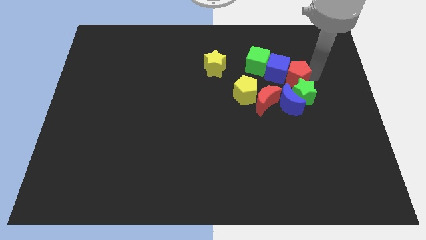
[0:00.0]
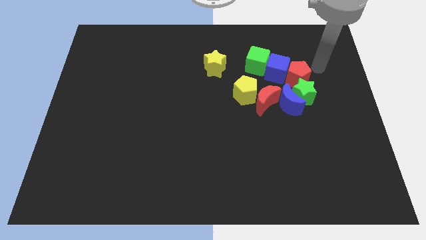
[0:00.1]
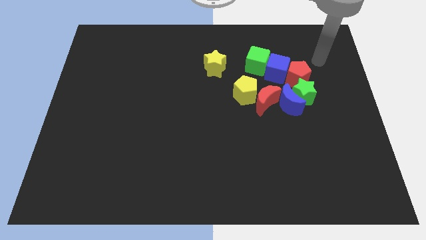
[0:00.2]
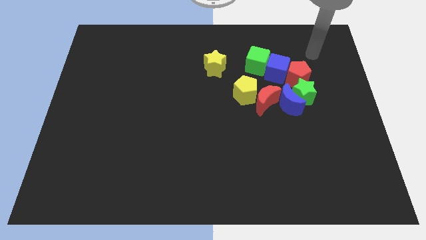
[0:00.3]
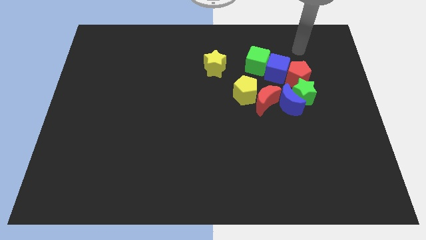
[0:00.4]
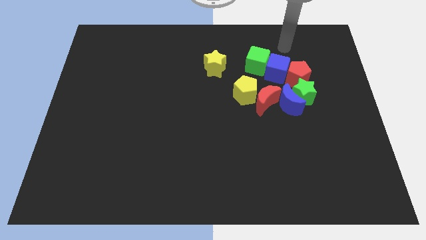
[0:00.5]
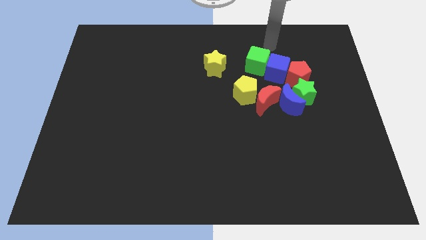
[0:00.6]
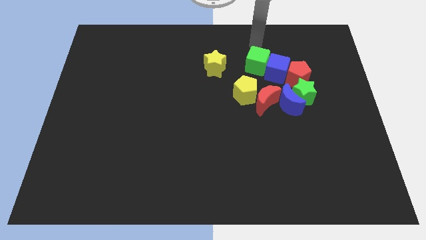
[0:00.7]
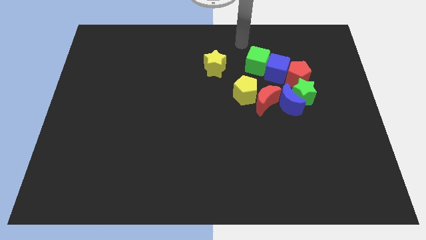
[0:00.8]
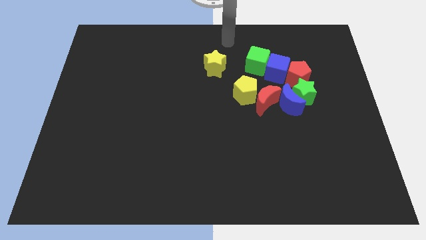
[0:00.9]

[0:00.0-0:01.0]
move the arm away from the red pentagon

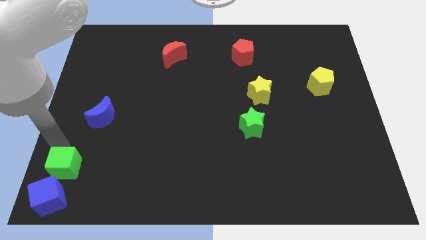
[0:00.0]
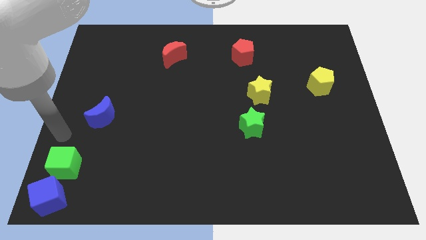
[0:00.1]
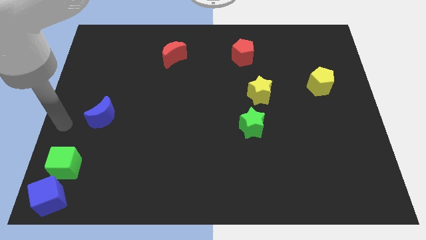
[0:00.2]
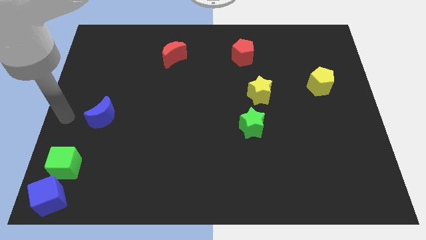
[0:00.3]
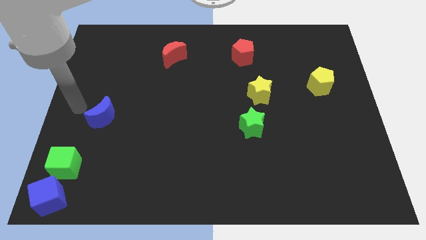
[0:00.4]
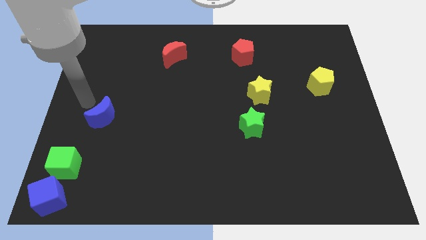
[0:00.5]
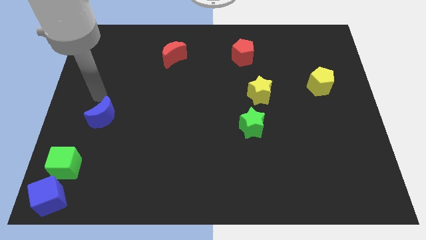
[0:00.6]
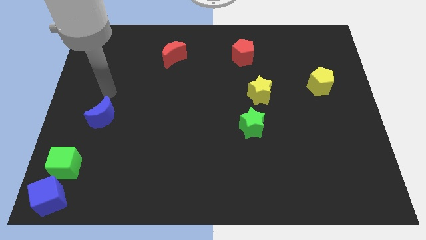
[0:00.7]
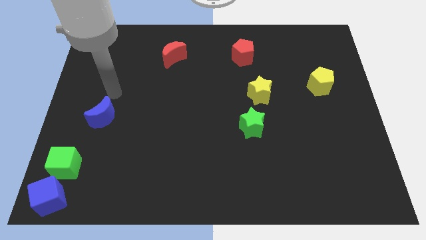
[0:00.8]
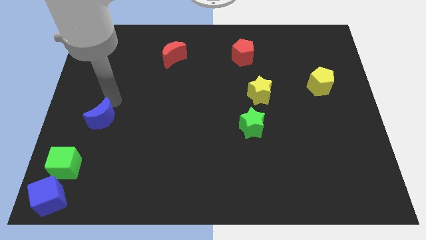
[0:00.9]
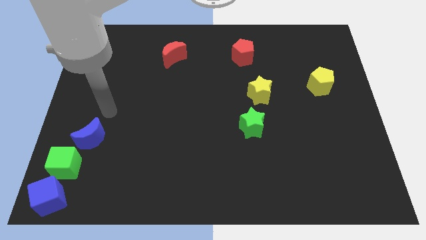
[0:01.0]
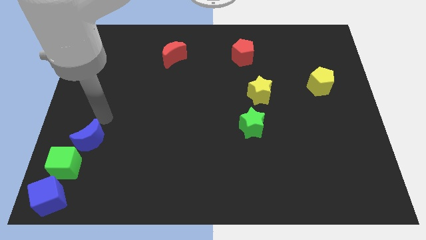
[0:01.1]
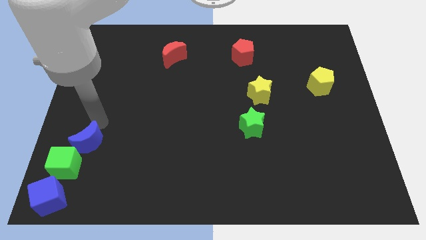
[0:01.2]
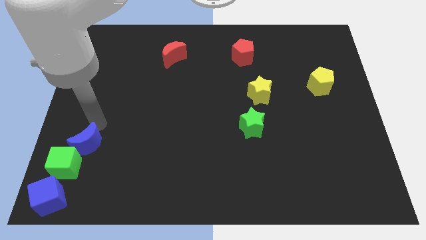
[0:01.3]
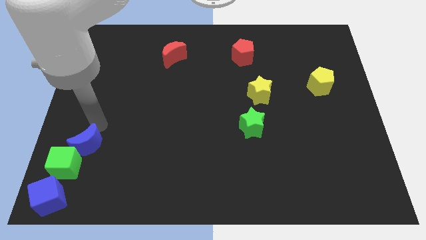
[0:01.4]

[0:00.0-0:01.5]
put the blue moon at the top of green cube

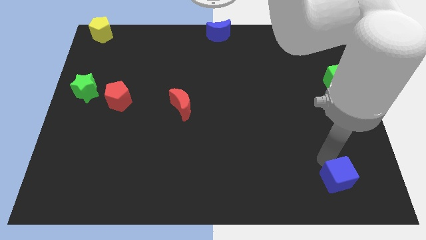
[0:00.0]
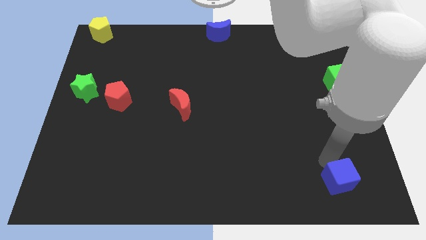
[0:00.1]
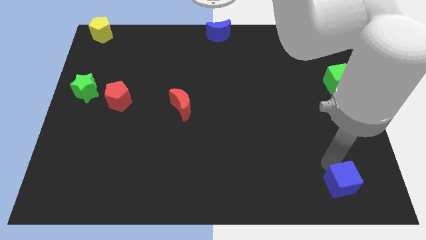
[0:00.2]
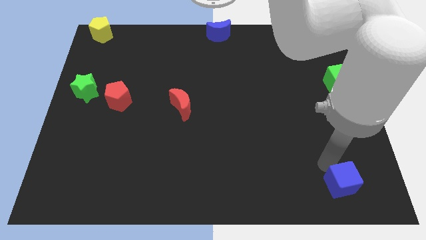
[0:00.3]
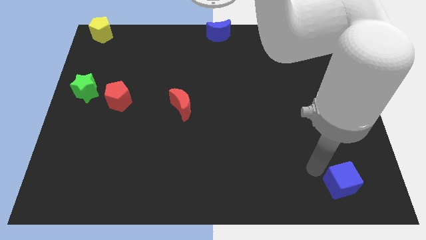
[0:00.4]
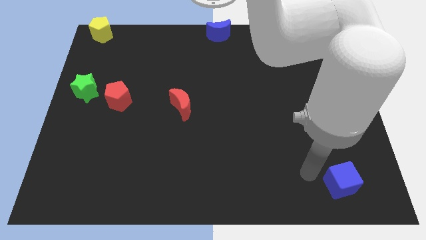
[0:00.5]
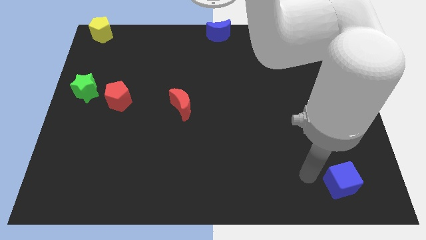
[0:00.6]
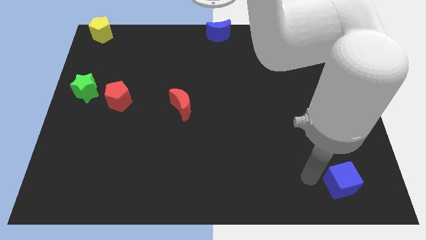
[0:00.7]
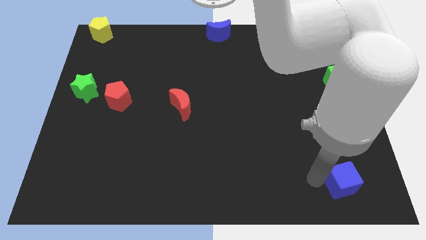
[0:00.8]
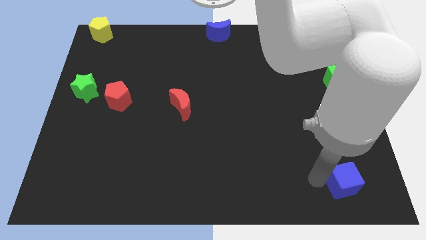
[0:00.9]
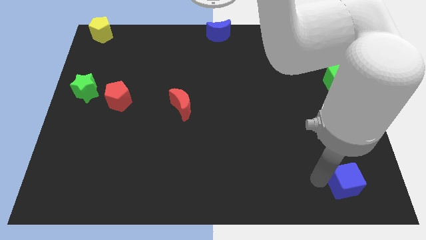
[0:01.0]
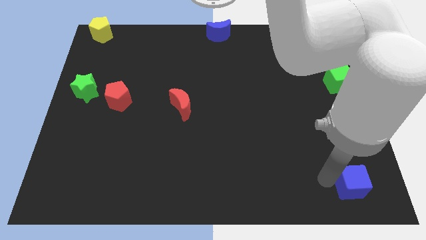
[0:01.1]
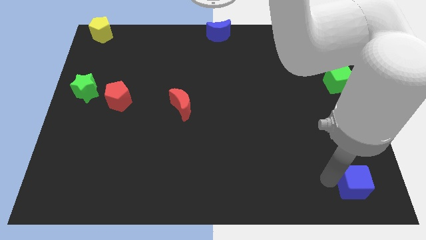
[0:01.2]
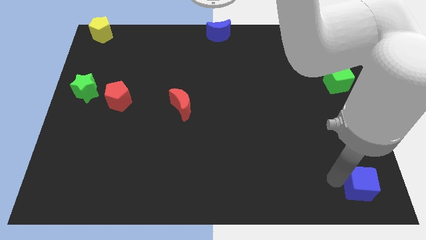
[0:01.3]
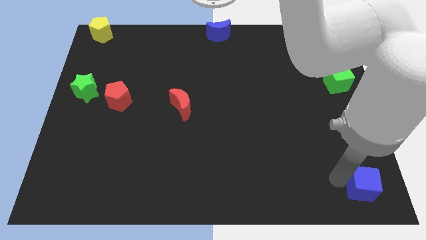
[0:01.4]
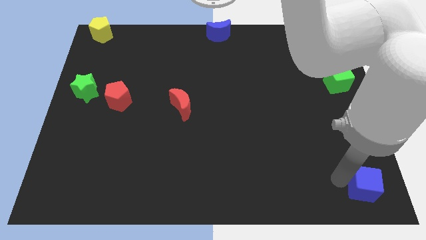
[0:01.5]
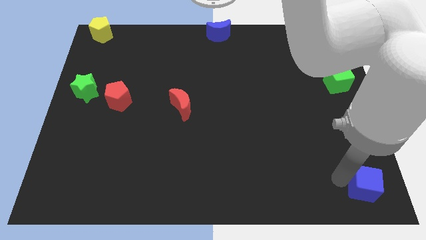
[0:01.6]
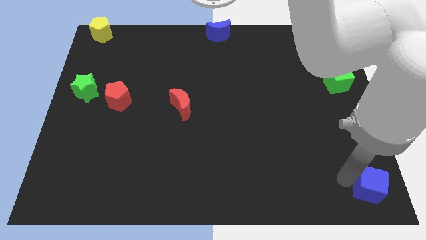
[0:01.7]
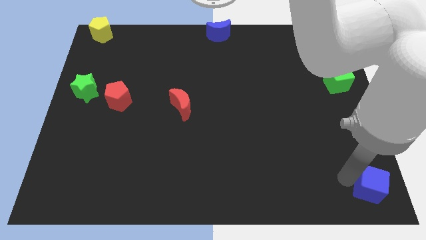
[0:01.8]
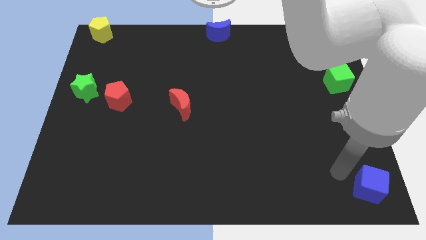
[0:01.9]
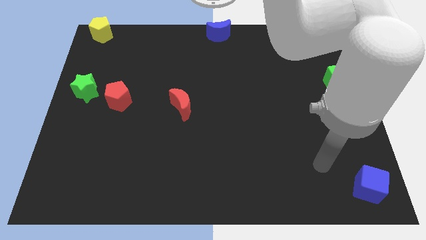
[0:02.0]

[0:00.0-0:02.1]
push blue cube towards bottom right

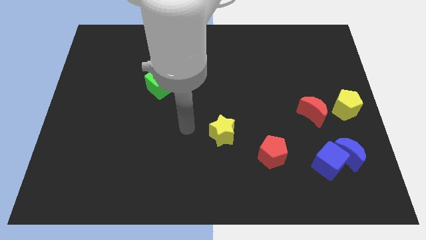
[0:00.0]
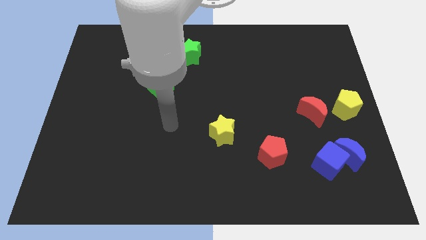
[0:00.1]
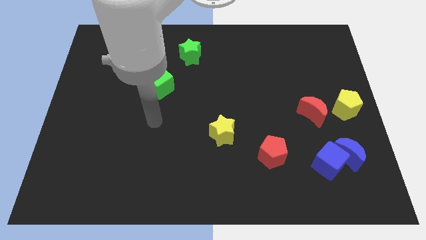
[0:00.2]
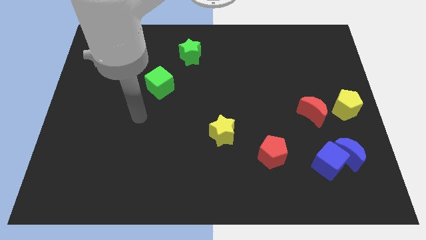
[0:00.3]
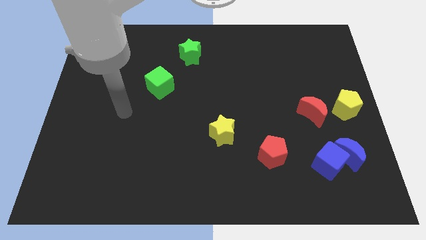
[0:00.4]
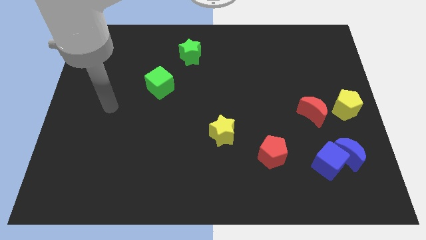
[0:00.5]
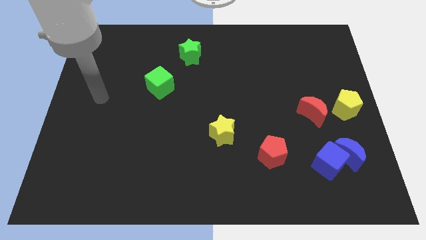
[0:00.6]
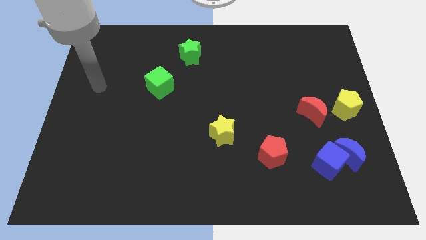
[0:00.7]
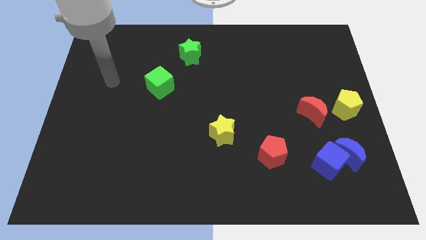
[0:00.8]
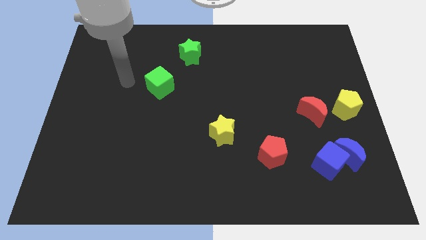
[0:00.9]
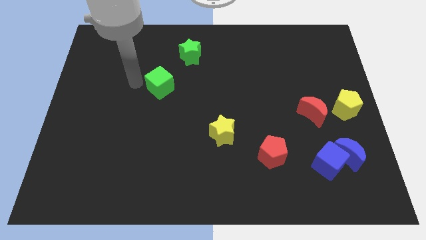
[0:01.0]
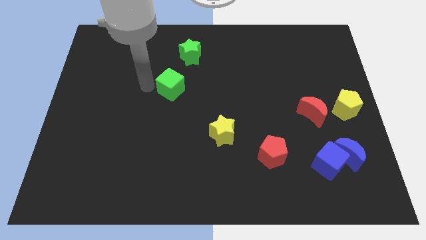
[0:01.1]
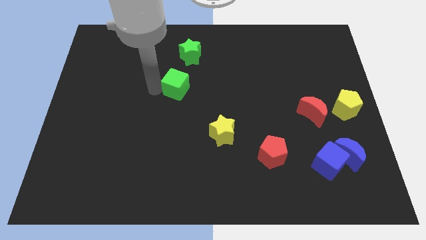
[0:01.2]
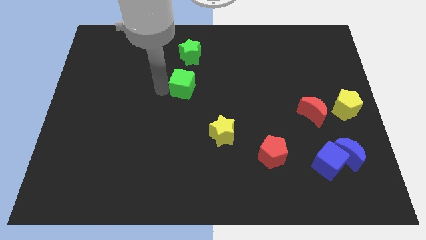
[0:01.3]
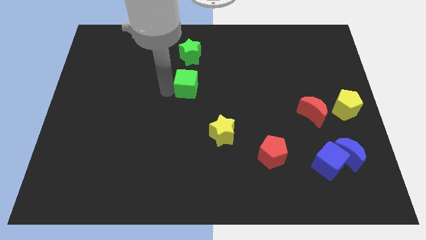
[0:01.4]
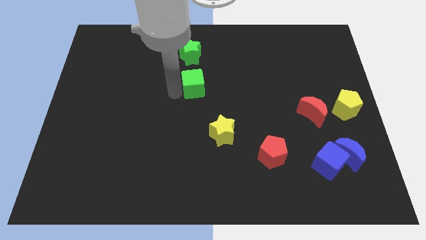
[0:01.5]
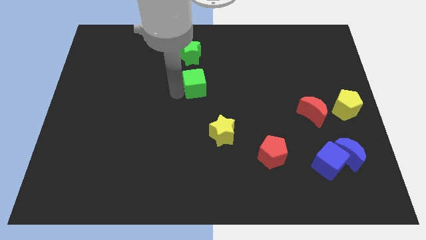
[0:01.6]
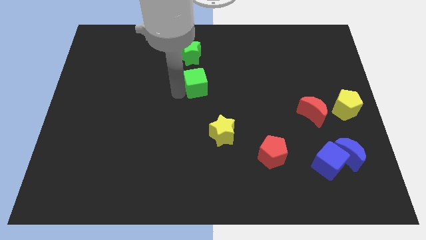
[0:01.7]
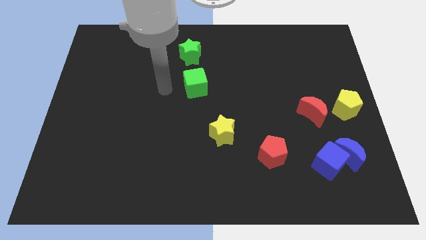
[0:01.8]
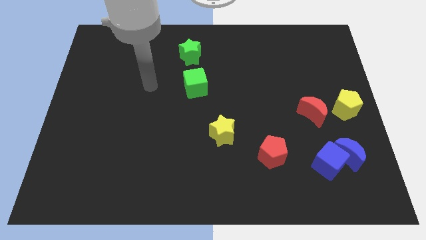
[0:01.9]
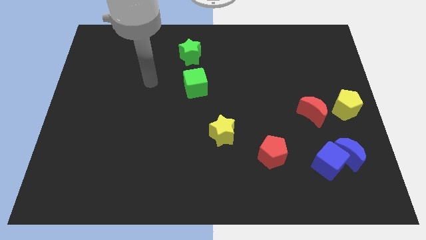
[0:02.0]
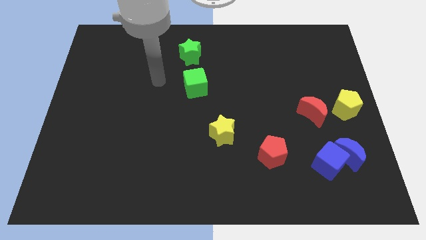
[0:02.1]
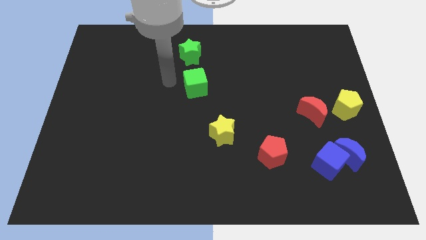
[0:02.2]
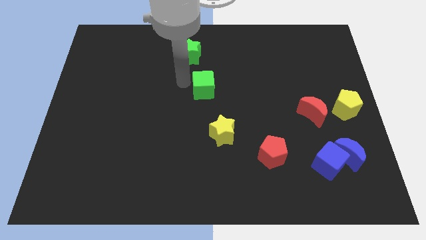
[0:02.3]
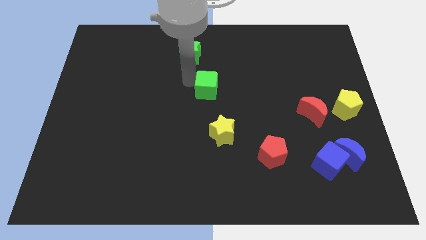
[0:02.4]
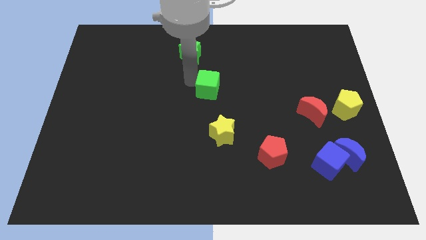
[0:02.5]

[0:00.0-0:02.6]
move the green cube above the yellow star

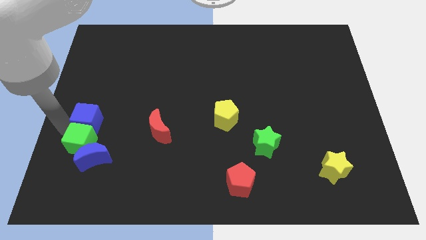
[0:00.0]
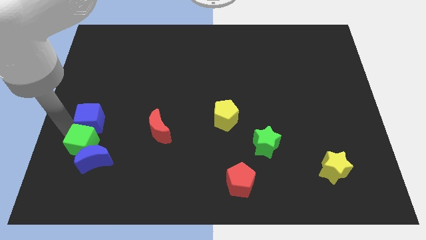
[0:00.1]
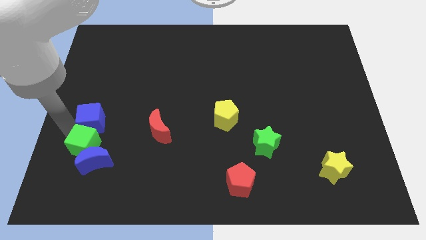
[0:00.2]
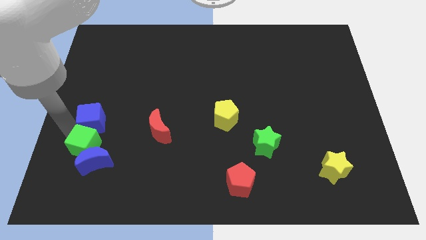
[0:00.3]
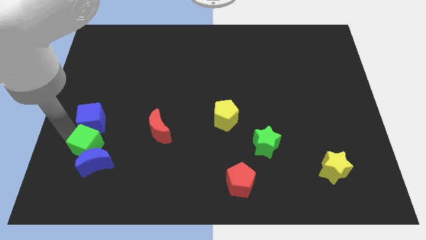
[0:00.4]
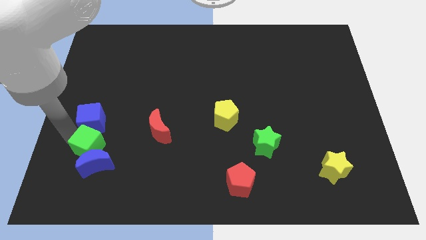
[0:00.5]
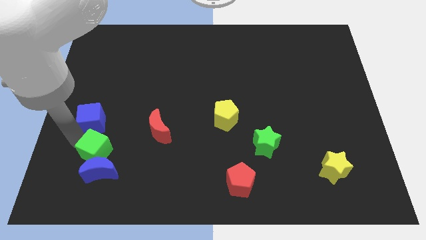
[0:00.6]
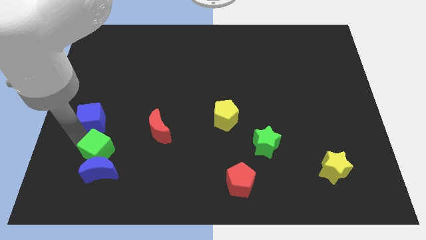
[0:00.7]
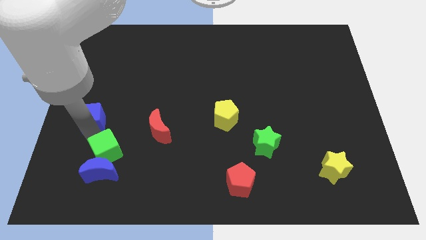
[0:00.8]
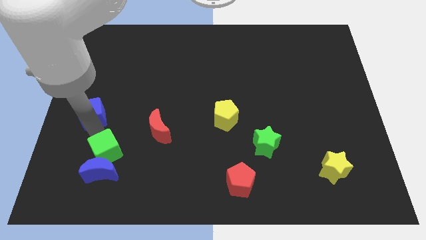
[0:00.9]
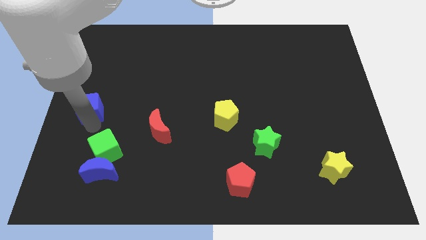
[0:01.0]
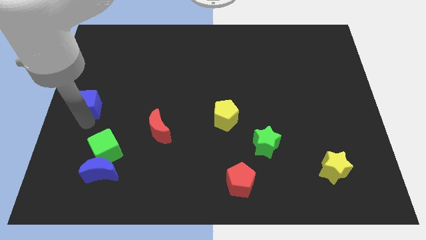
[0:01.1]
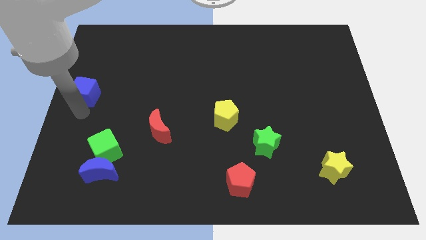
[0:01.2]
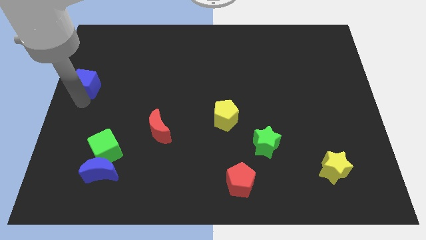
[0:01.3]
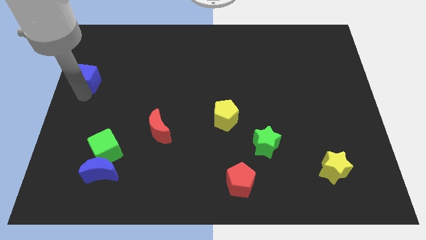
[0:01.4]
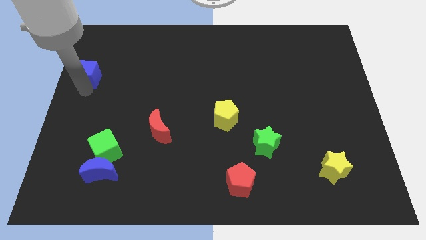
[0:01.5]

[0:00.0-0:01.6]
move the blue cube away from the green cube

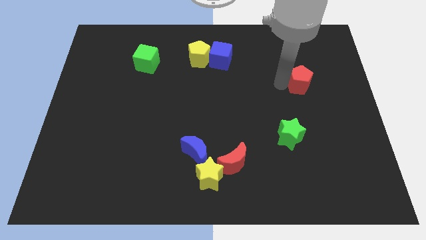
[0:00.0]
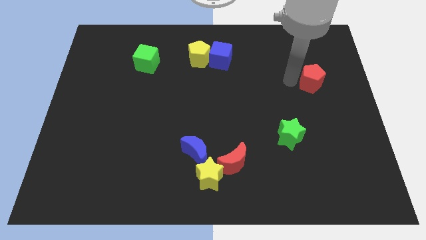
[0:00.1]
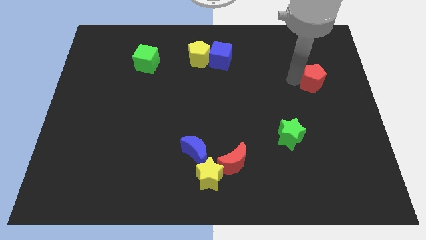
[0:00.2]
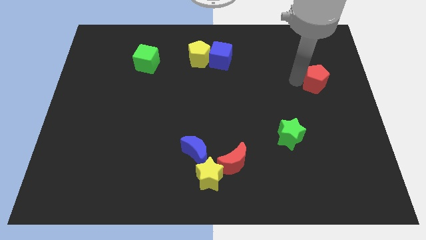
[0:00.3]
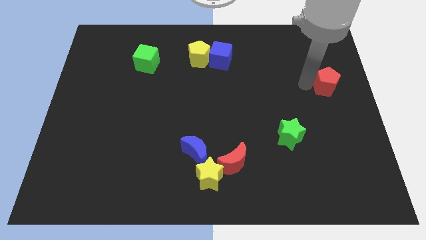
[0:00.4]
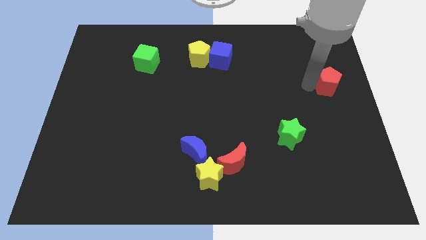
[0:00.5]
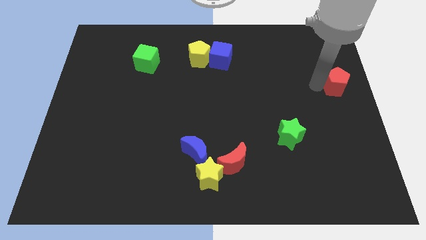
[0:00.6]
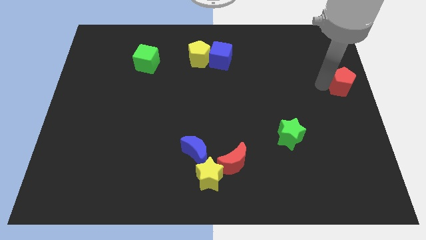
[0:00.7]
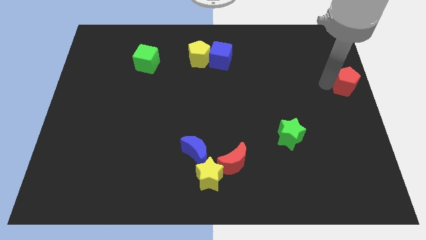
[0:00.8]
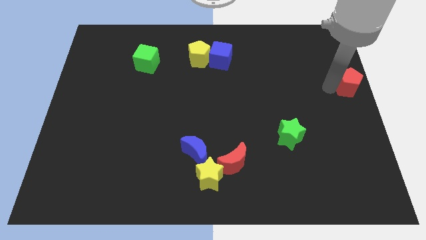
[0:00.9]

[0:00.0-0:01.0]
place the red pentagon diagonally above green star
